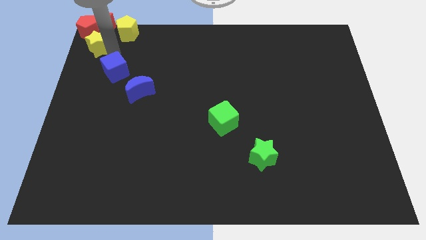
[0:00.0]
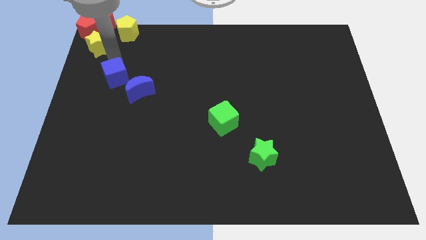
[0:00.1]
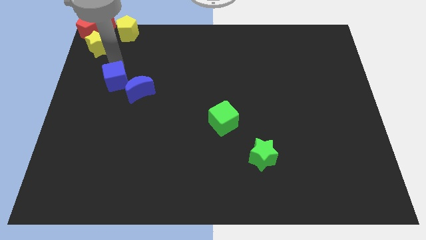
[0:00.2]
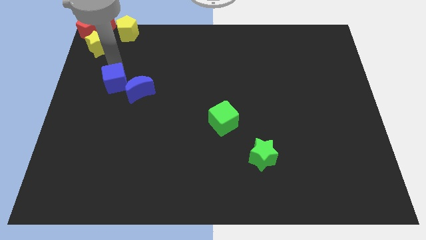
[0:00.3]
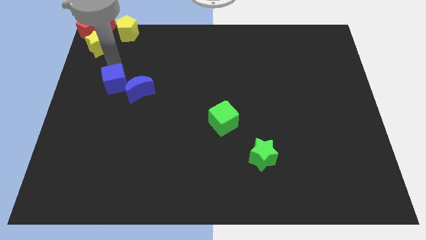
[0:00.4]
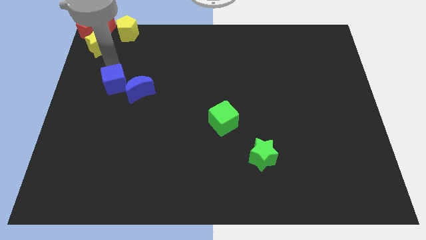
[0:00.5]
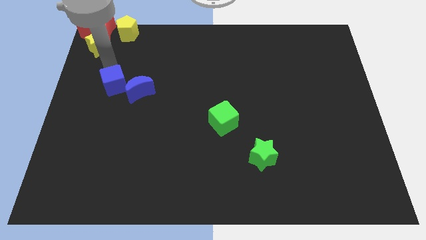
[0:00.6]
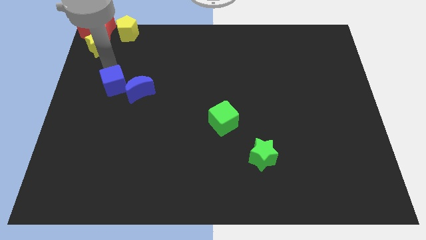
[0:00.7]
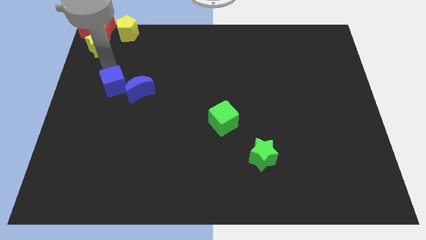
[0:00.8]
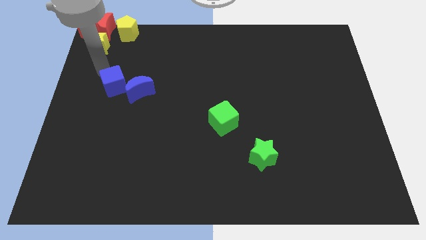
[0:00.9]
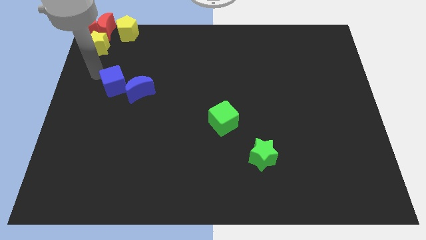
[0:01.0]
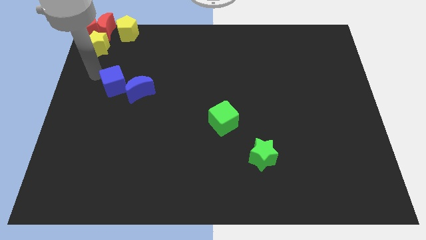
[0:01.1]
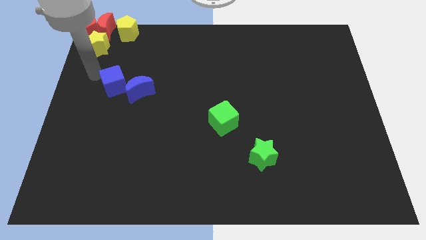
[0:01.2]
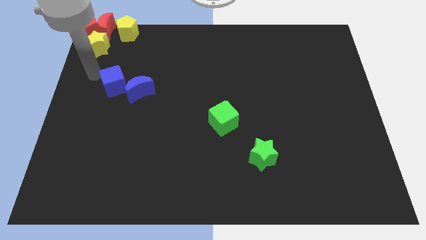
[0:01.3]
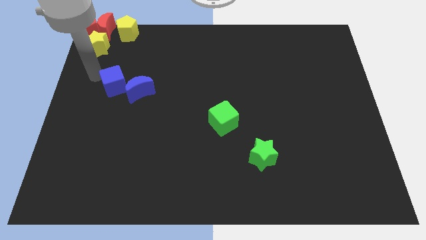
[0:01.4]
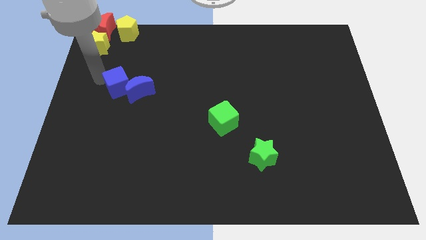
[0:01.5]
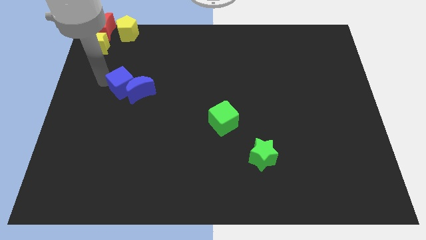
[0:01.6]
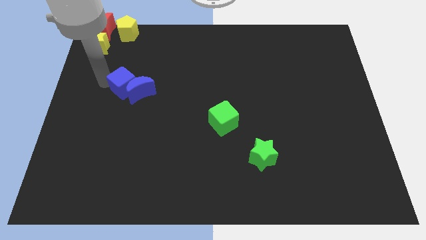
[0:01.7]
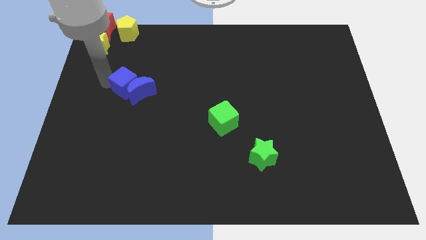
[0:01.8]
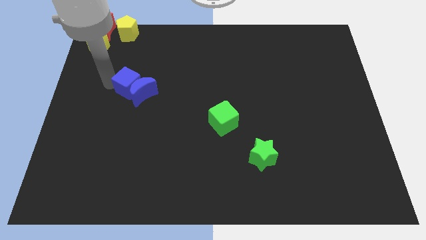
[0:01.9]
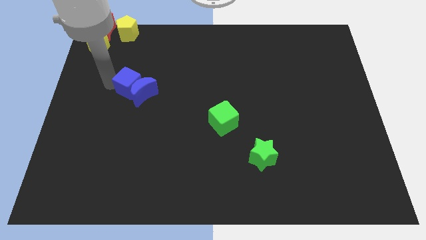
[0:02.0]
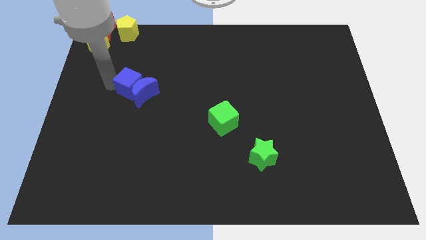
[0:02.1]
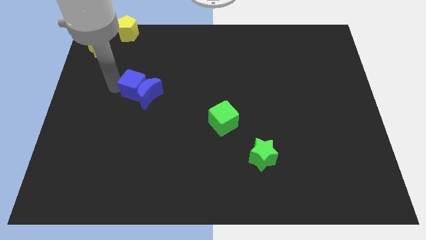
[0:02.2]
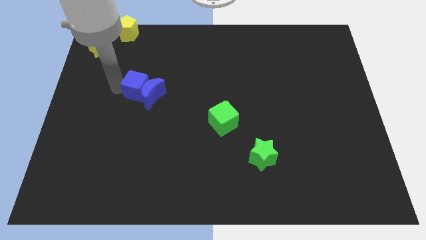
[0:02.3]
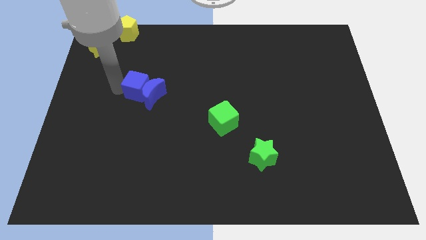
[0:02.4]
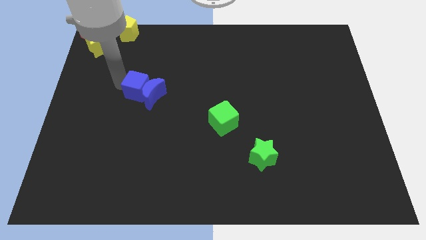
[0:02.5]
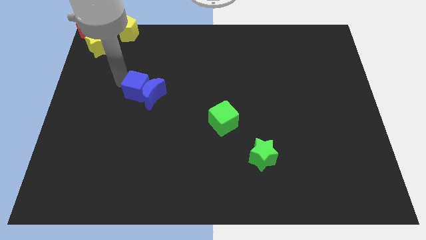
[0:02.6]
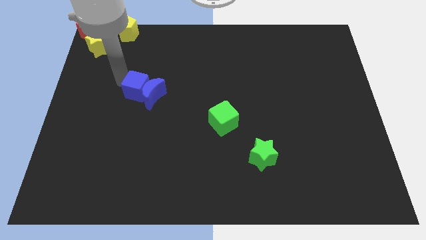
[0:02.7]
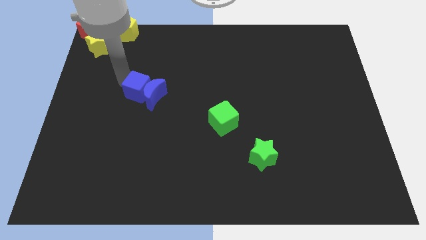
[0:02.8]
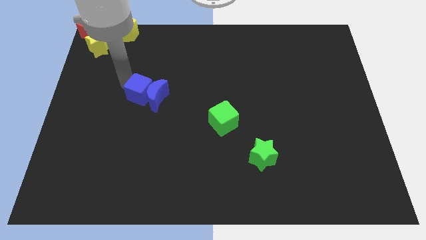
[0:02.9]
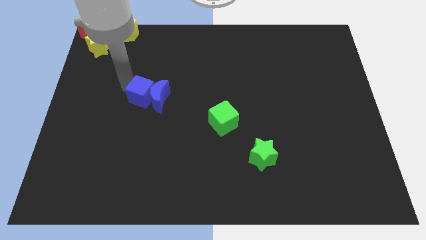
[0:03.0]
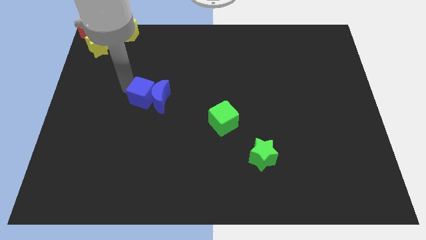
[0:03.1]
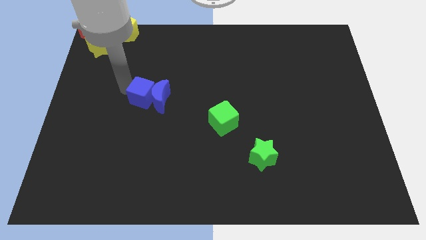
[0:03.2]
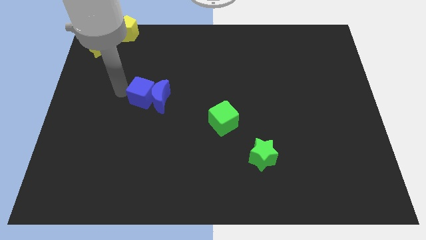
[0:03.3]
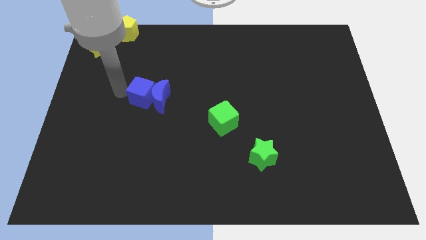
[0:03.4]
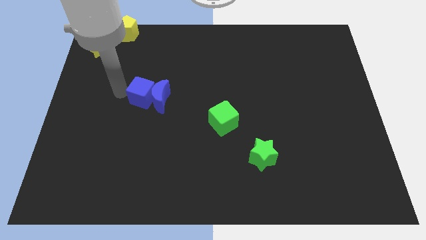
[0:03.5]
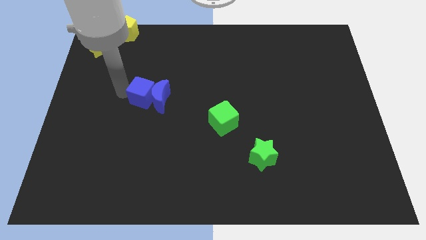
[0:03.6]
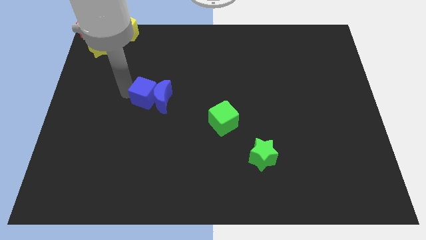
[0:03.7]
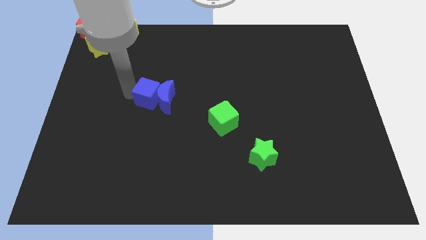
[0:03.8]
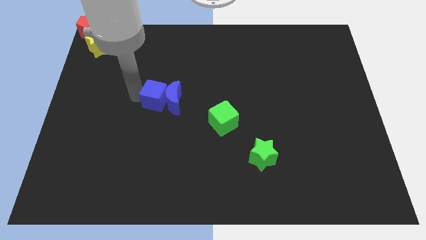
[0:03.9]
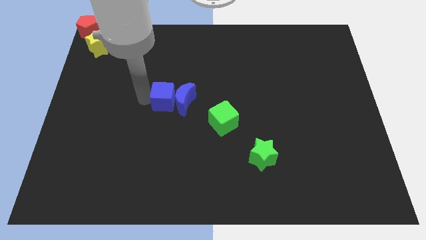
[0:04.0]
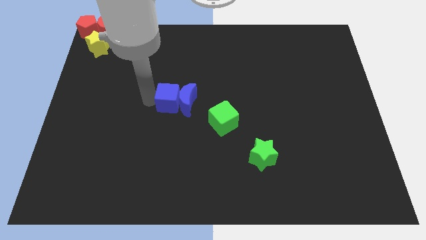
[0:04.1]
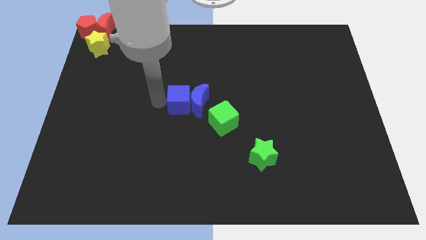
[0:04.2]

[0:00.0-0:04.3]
slide both the blue blocks towards the center of the board

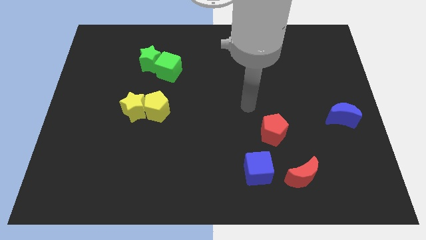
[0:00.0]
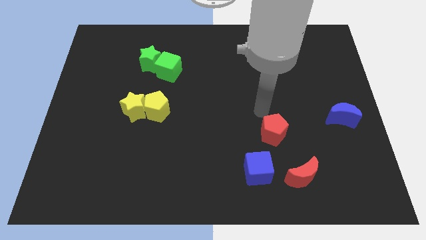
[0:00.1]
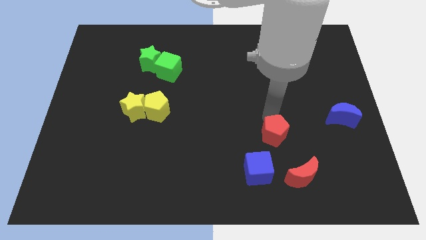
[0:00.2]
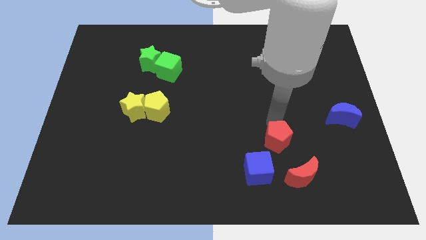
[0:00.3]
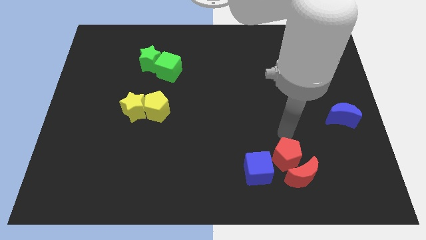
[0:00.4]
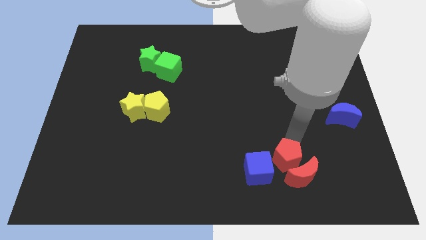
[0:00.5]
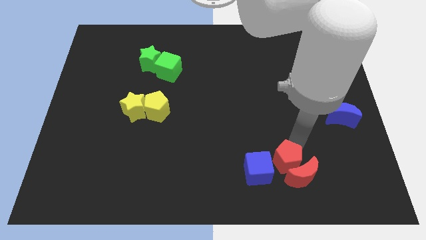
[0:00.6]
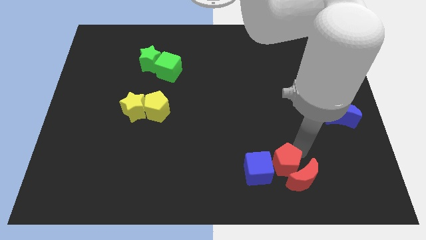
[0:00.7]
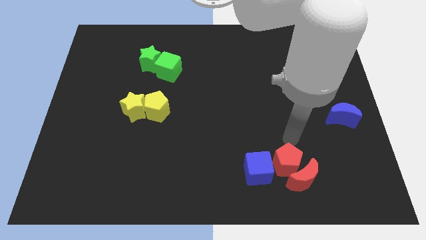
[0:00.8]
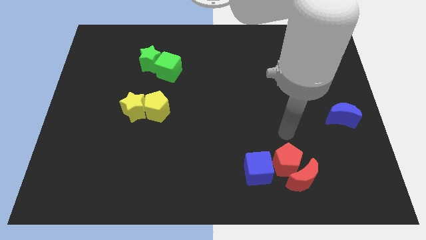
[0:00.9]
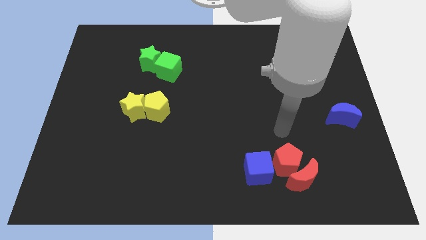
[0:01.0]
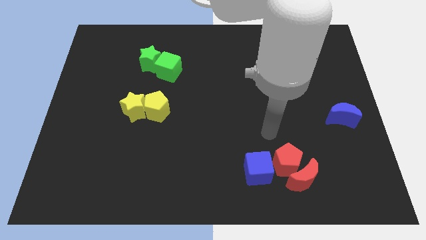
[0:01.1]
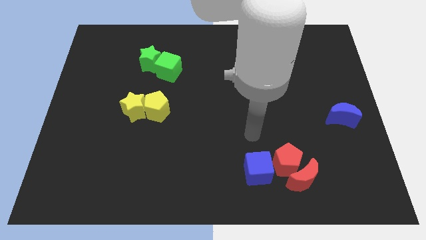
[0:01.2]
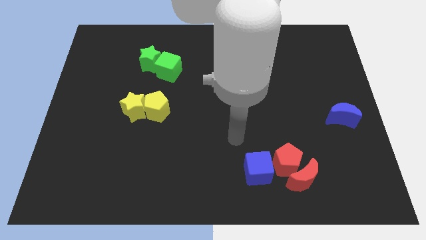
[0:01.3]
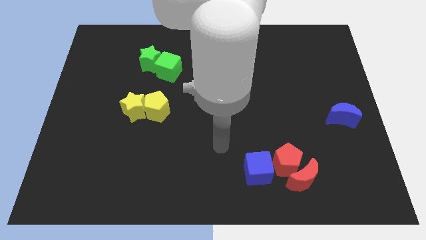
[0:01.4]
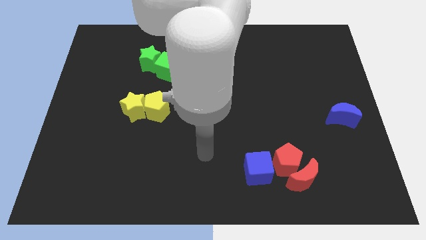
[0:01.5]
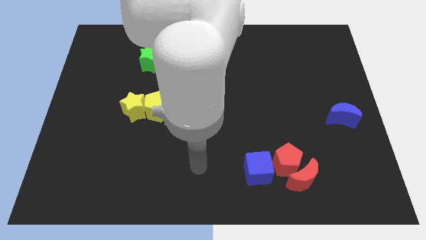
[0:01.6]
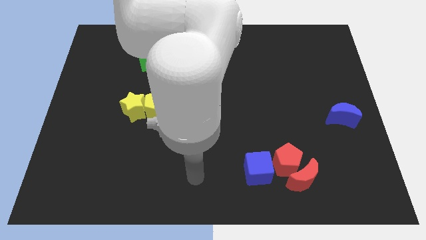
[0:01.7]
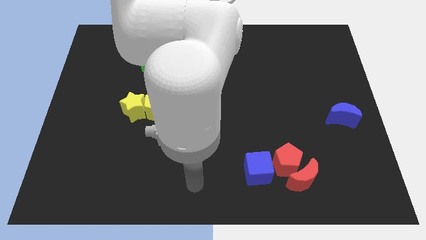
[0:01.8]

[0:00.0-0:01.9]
place the red pentagon to top right of blue cube

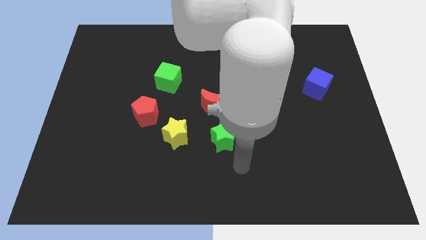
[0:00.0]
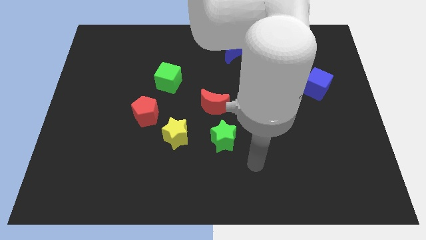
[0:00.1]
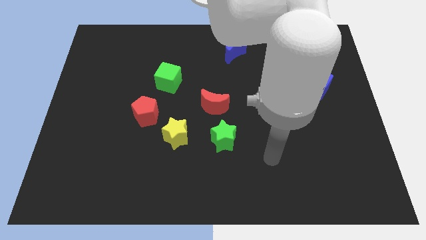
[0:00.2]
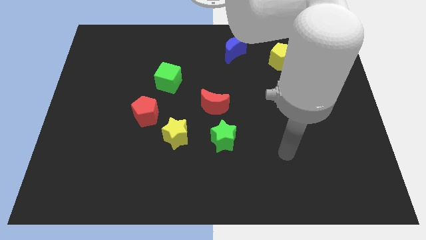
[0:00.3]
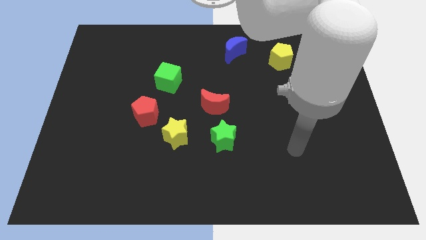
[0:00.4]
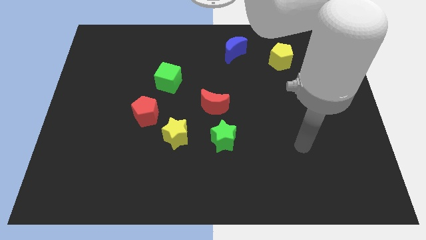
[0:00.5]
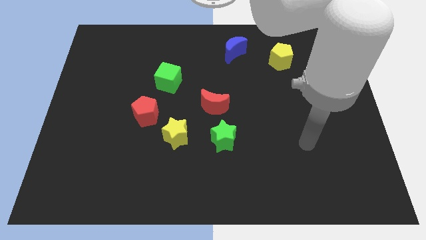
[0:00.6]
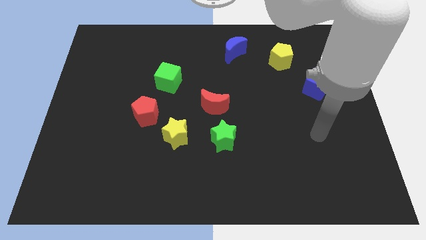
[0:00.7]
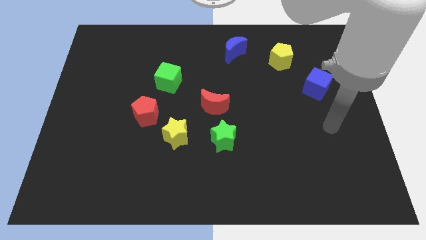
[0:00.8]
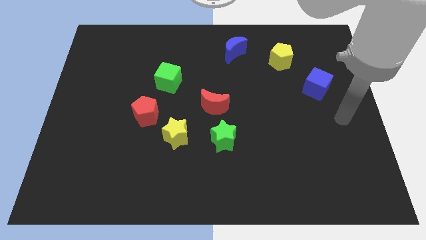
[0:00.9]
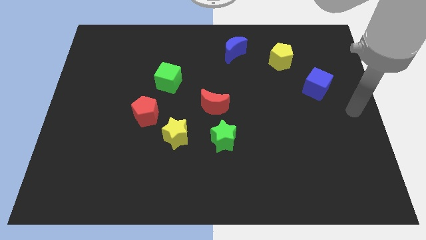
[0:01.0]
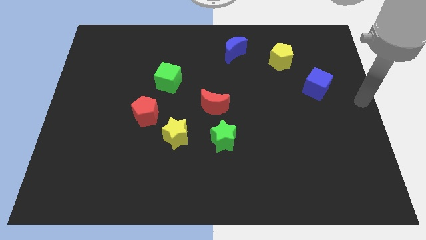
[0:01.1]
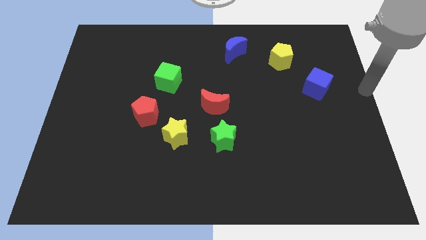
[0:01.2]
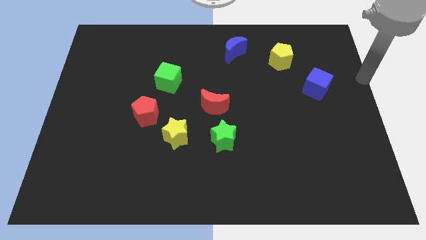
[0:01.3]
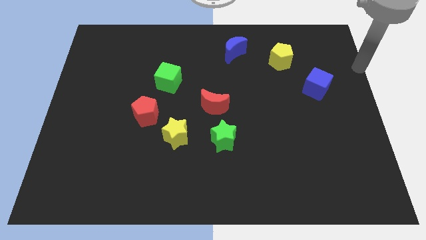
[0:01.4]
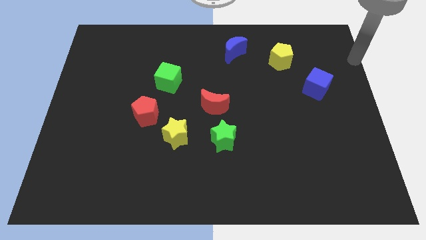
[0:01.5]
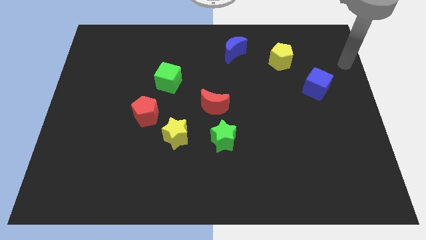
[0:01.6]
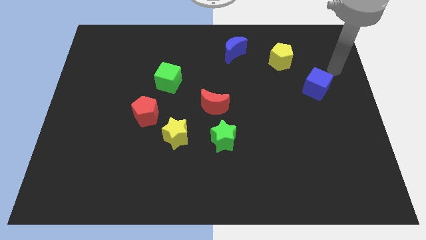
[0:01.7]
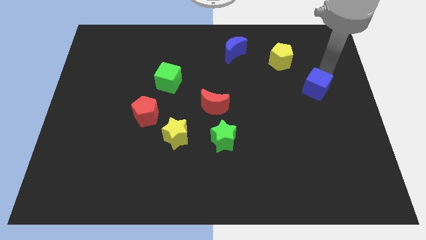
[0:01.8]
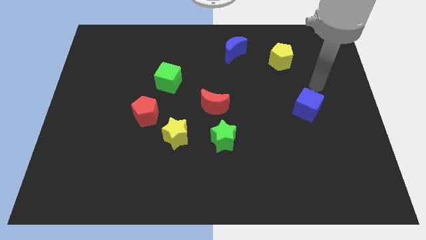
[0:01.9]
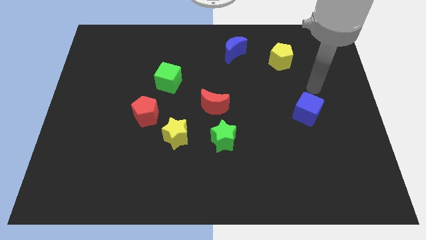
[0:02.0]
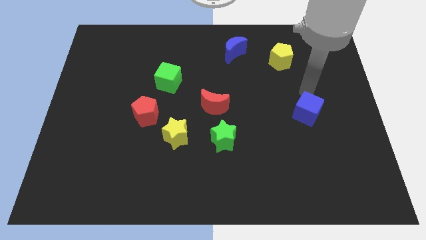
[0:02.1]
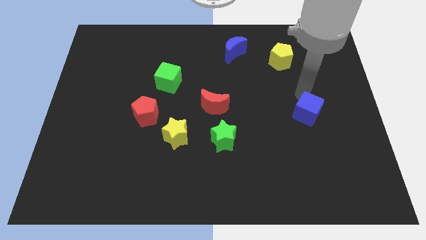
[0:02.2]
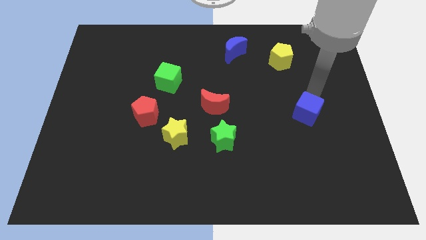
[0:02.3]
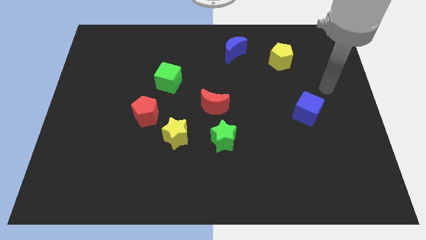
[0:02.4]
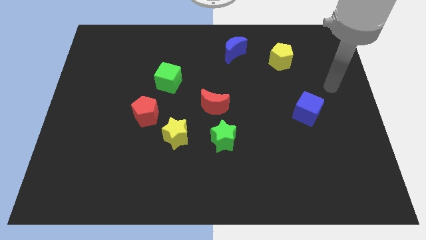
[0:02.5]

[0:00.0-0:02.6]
move blue cube right beside red moon
